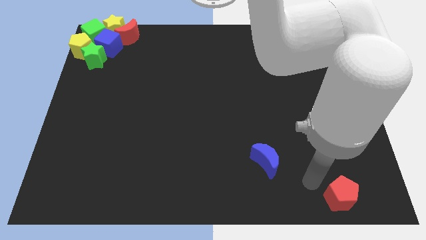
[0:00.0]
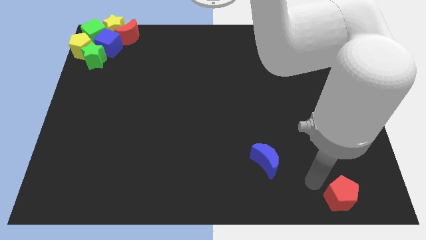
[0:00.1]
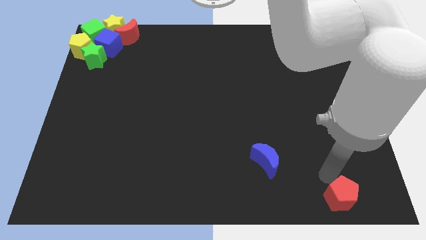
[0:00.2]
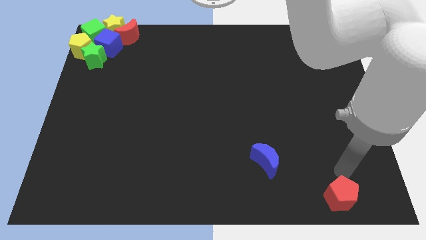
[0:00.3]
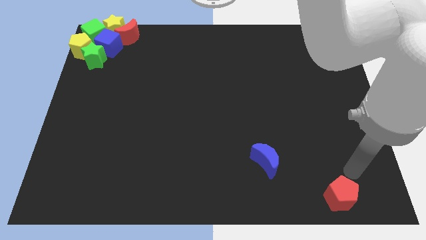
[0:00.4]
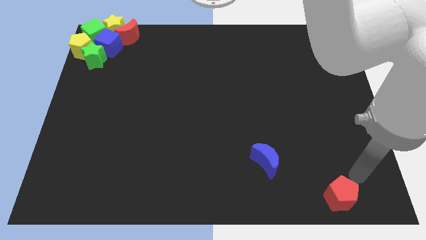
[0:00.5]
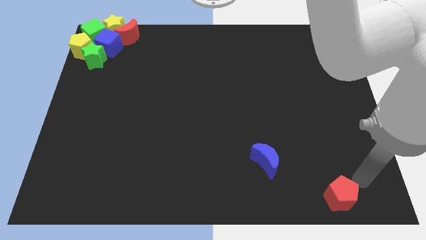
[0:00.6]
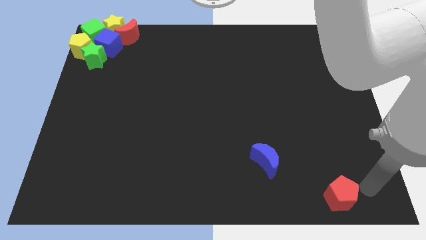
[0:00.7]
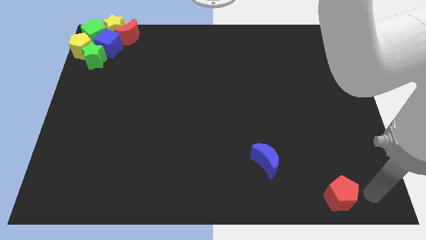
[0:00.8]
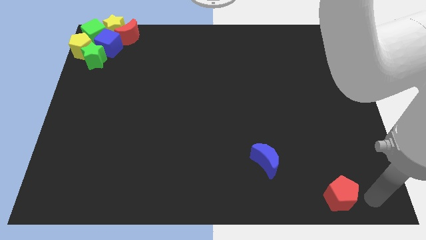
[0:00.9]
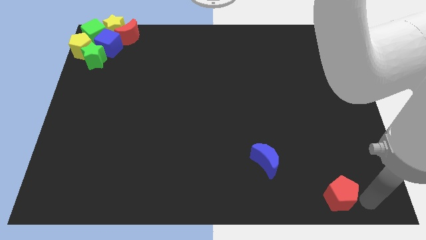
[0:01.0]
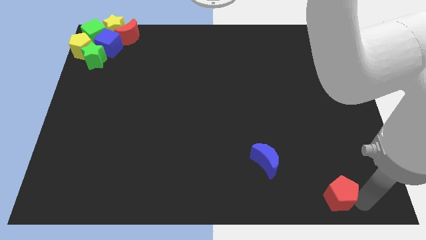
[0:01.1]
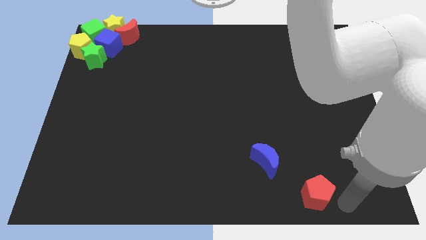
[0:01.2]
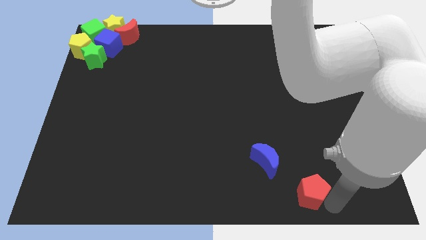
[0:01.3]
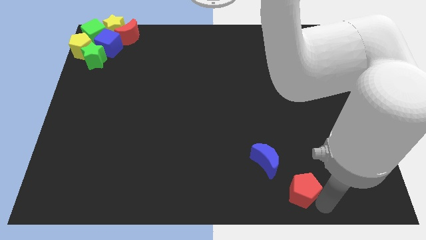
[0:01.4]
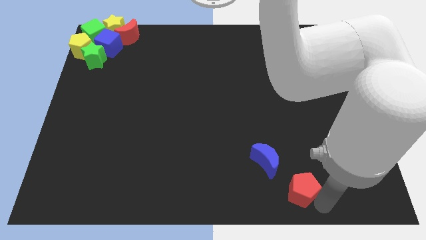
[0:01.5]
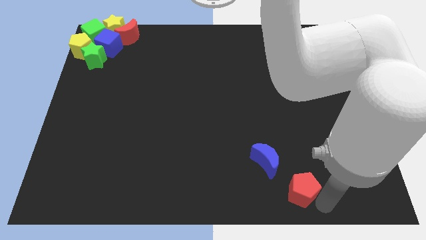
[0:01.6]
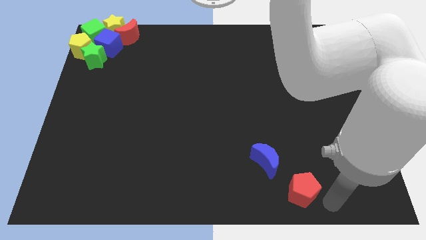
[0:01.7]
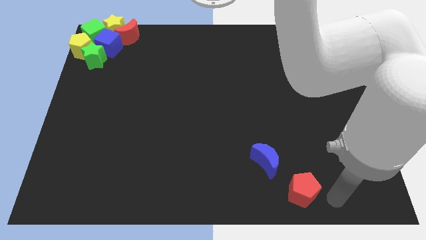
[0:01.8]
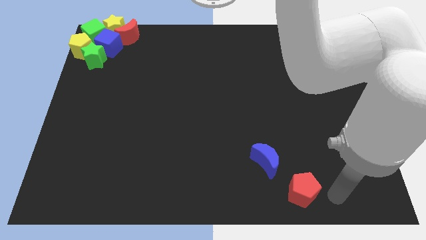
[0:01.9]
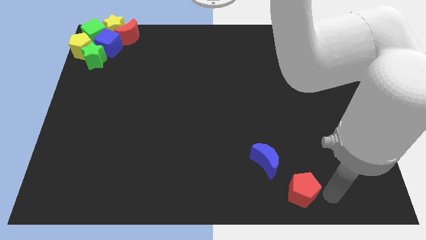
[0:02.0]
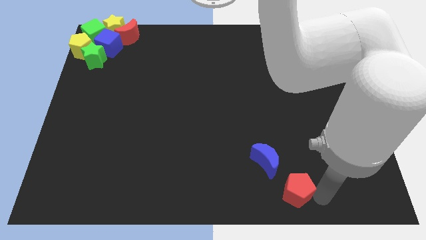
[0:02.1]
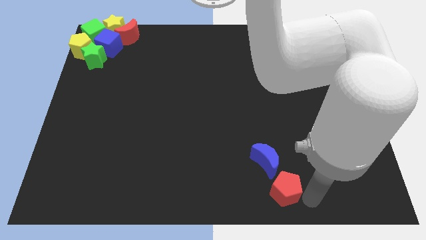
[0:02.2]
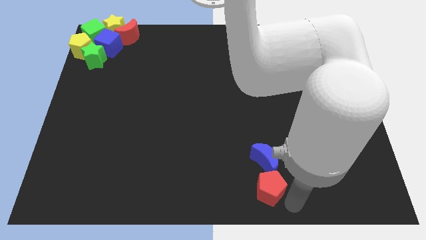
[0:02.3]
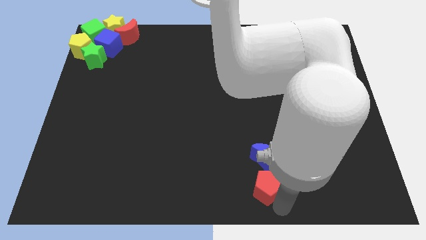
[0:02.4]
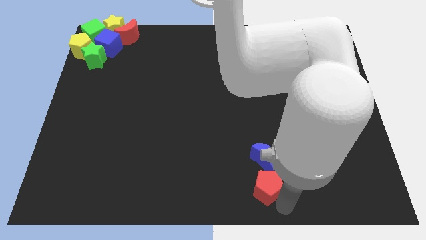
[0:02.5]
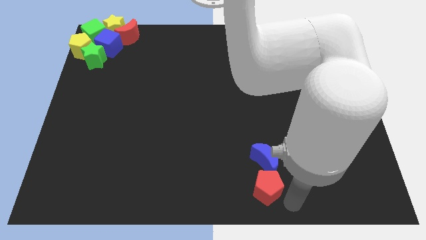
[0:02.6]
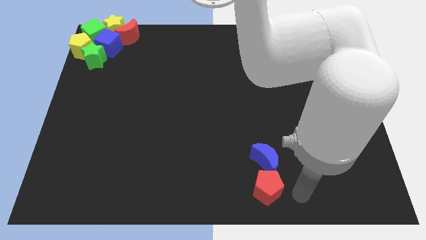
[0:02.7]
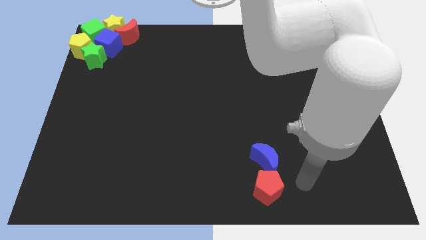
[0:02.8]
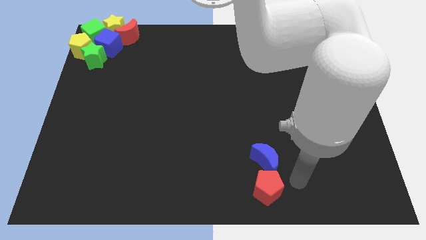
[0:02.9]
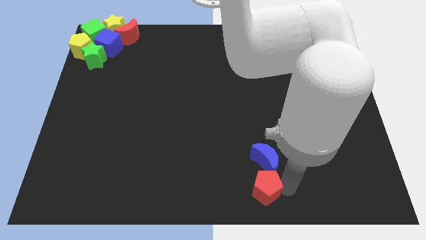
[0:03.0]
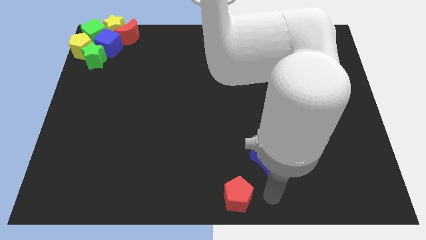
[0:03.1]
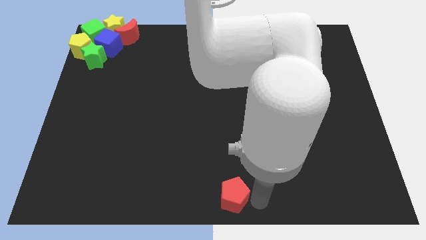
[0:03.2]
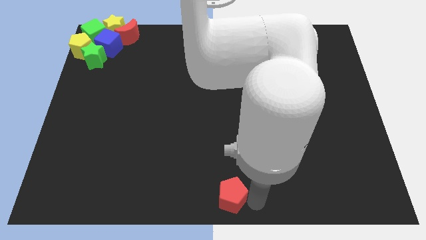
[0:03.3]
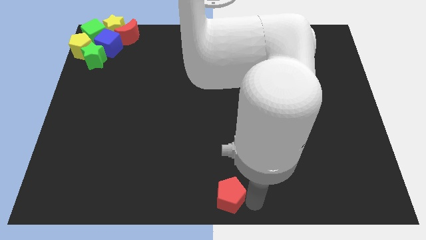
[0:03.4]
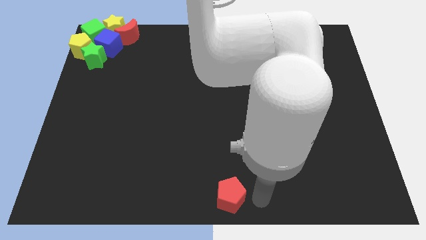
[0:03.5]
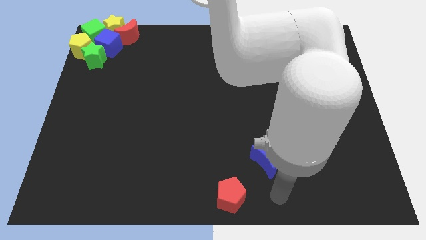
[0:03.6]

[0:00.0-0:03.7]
place the red pentagon towards the bottom center

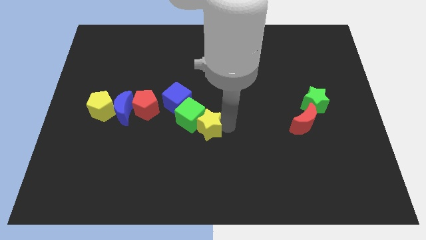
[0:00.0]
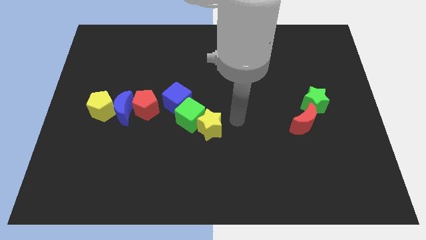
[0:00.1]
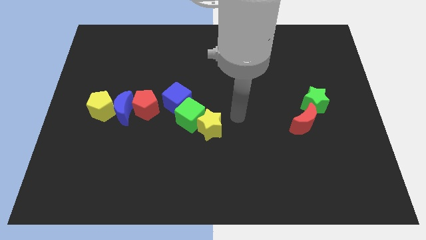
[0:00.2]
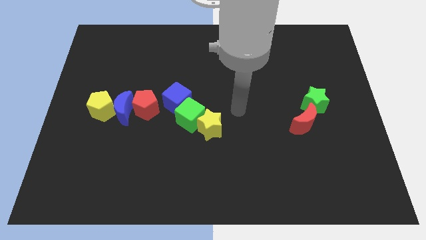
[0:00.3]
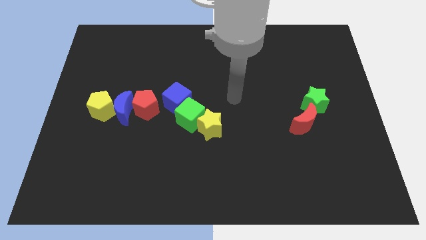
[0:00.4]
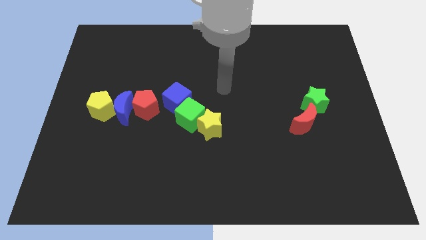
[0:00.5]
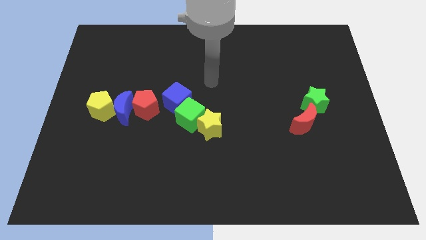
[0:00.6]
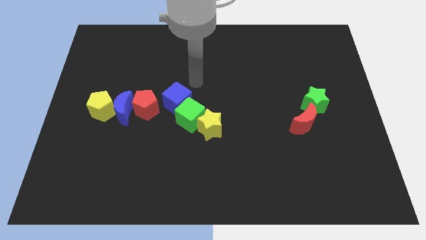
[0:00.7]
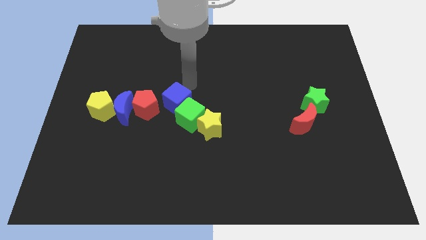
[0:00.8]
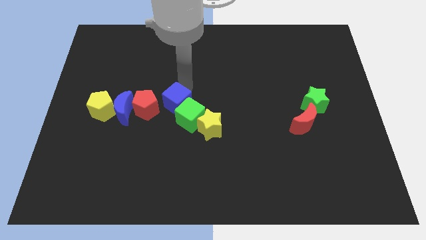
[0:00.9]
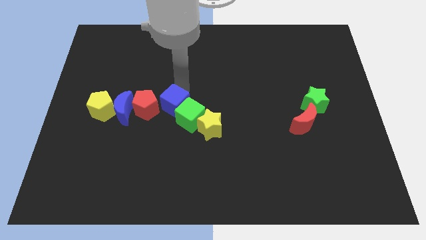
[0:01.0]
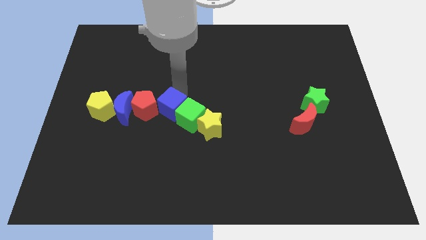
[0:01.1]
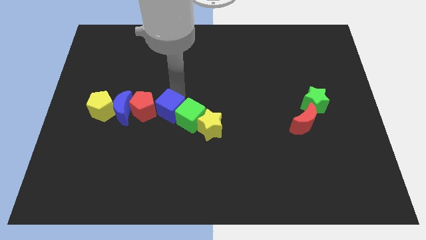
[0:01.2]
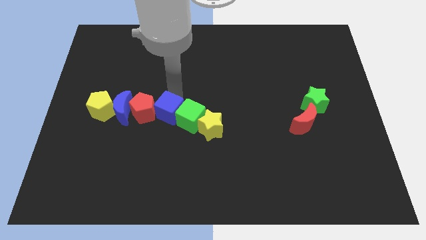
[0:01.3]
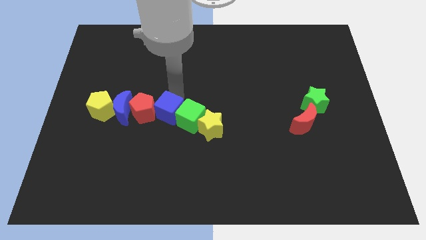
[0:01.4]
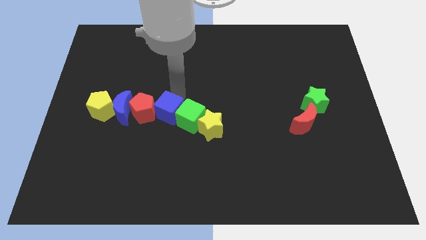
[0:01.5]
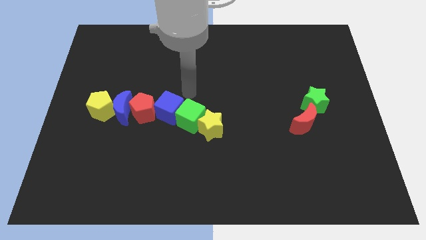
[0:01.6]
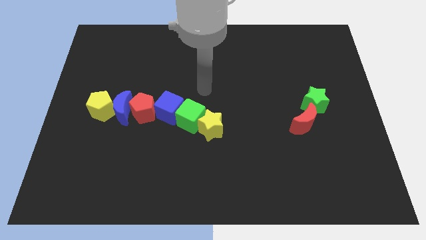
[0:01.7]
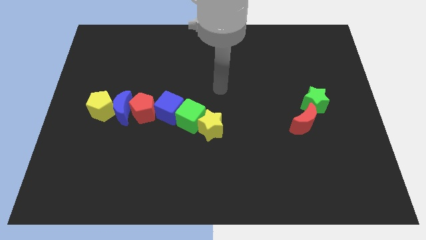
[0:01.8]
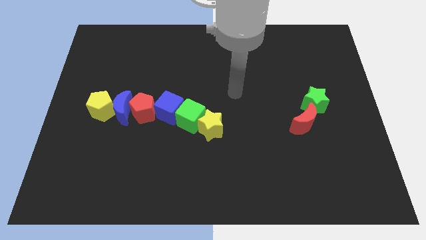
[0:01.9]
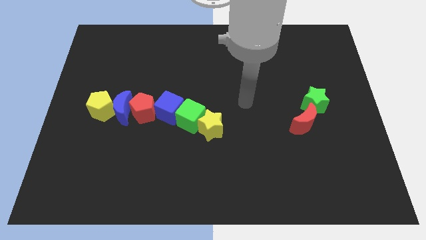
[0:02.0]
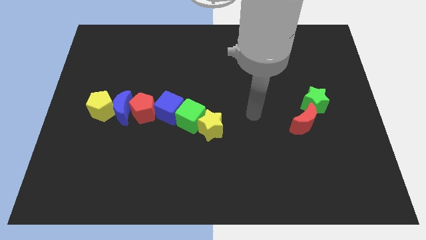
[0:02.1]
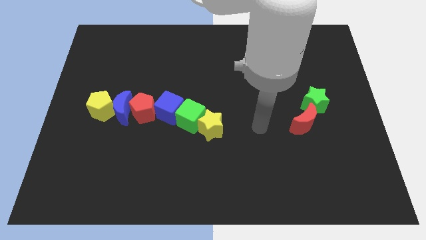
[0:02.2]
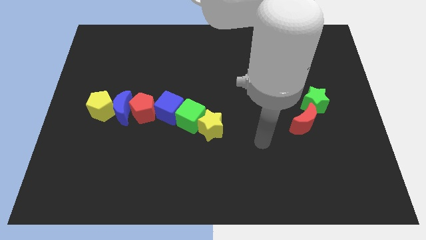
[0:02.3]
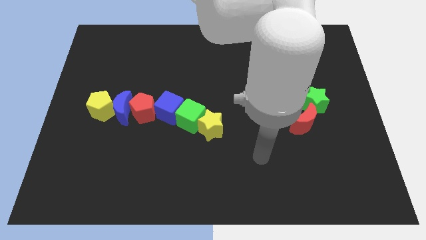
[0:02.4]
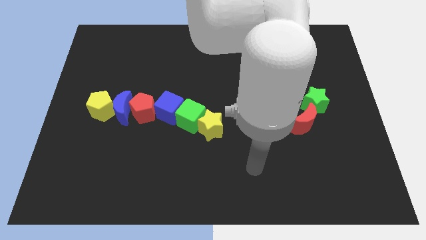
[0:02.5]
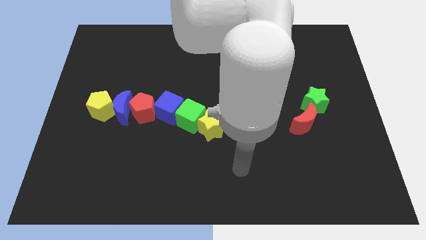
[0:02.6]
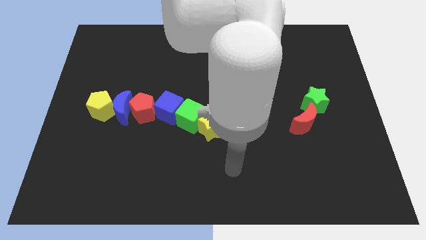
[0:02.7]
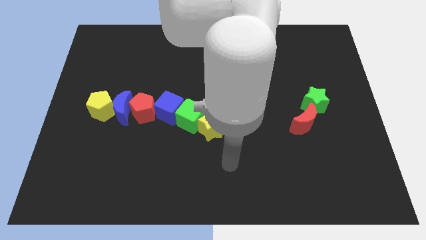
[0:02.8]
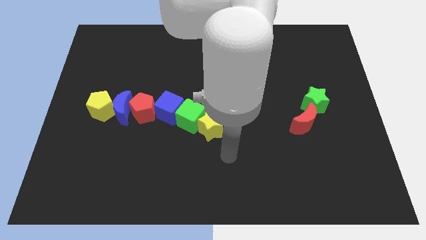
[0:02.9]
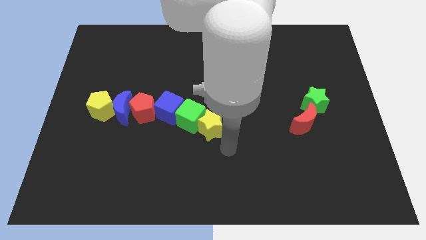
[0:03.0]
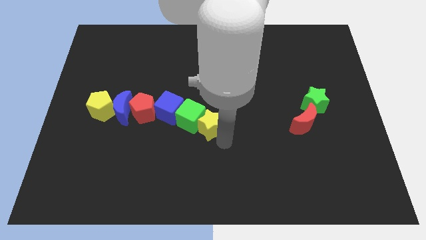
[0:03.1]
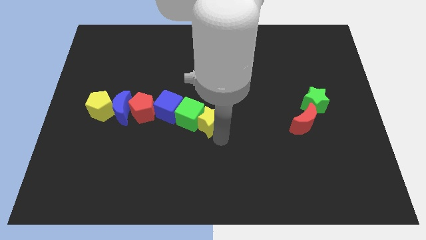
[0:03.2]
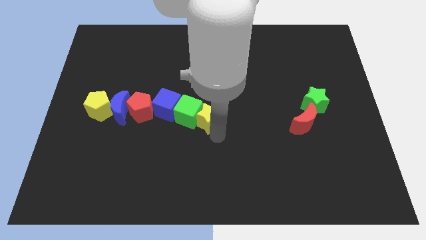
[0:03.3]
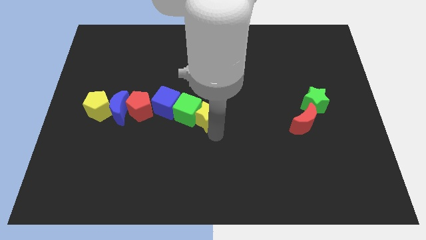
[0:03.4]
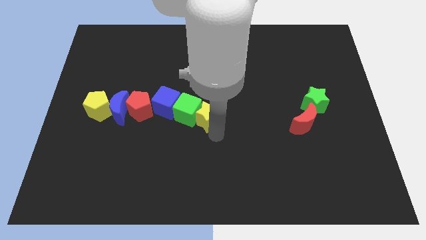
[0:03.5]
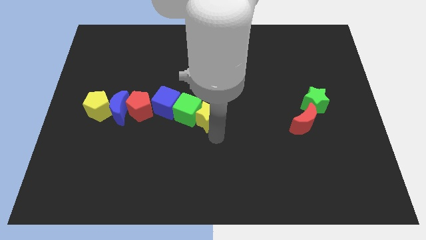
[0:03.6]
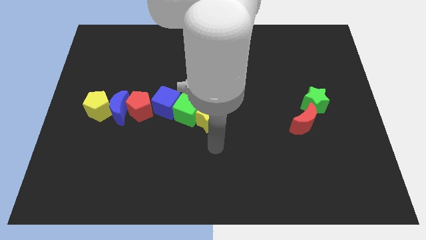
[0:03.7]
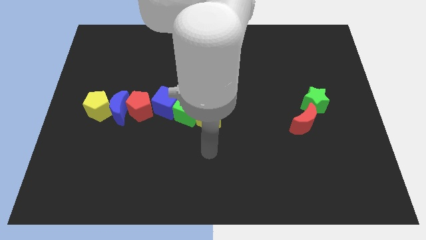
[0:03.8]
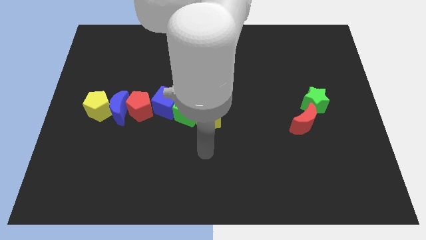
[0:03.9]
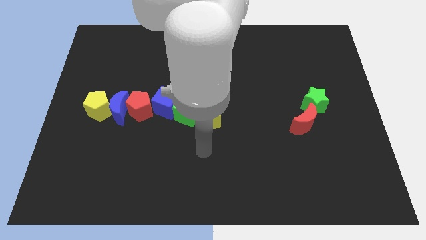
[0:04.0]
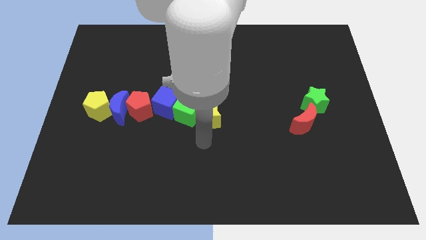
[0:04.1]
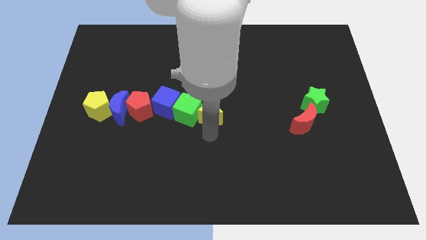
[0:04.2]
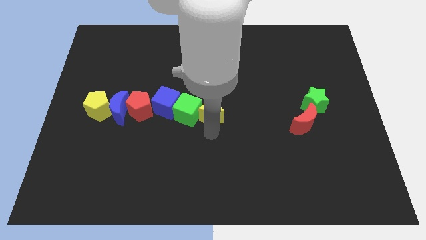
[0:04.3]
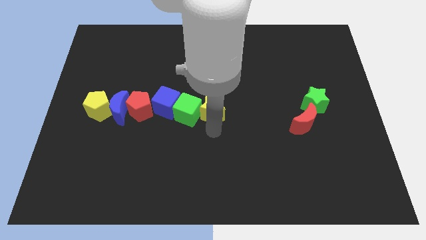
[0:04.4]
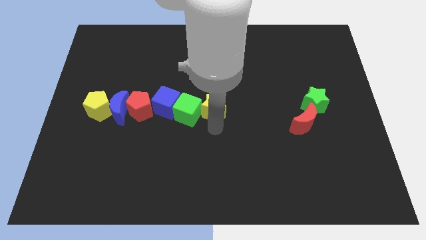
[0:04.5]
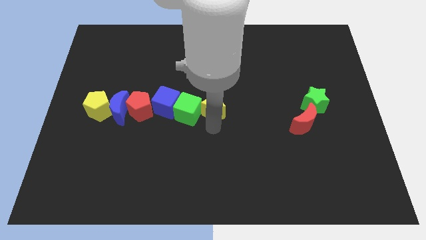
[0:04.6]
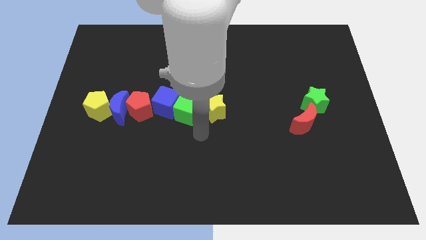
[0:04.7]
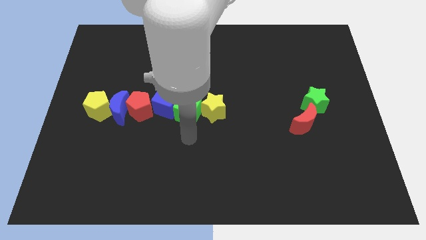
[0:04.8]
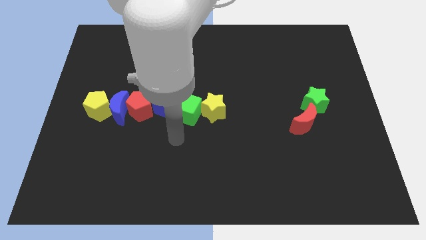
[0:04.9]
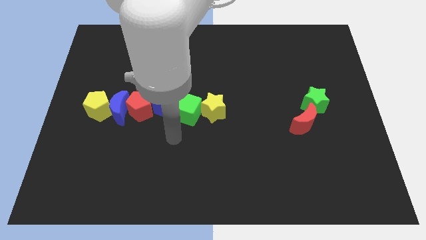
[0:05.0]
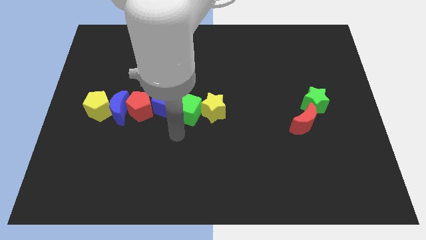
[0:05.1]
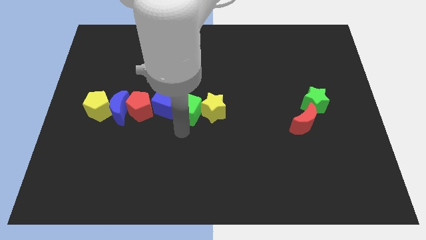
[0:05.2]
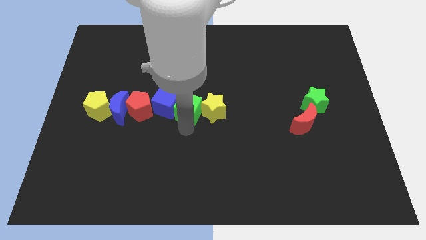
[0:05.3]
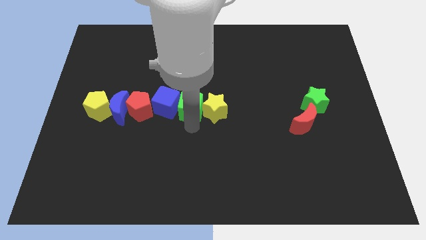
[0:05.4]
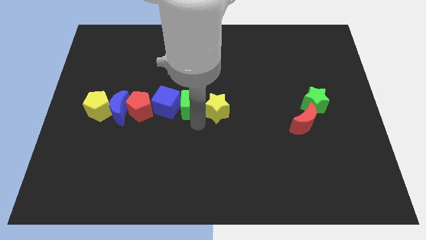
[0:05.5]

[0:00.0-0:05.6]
push the blue cube and yellow star
